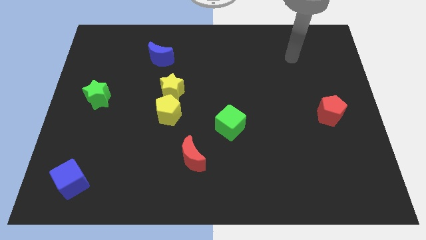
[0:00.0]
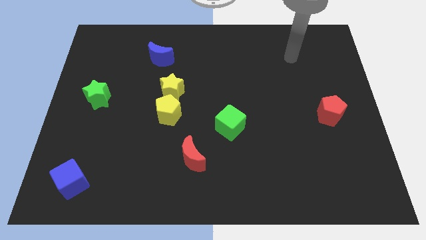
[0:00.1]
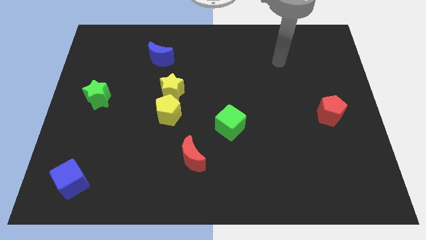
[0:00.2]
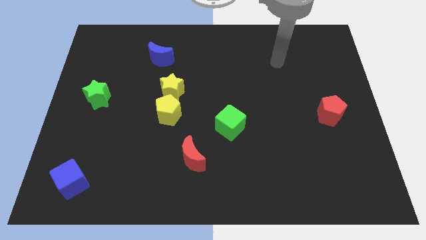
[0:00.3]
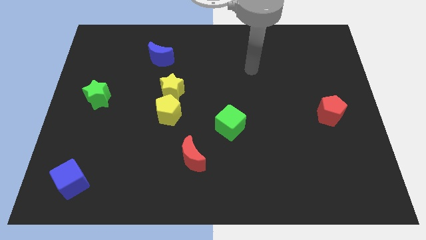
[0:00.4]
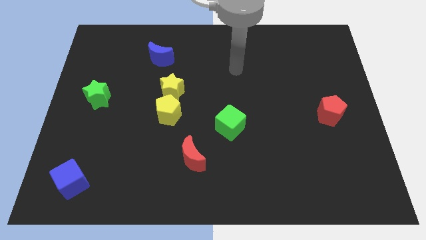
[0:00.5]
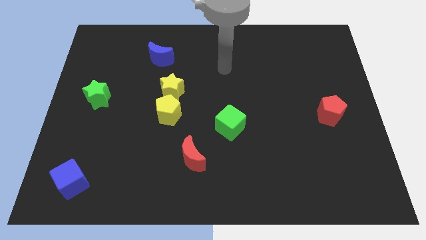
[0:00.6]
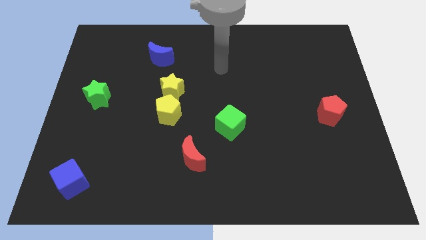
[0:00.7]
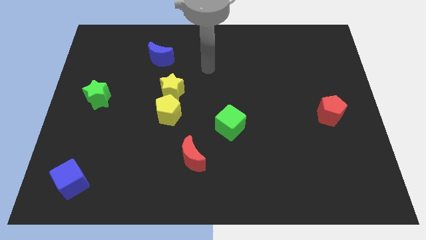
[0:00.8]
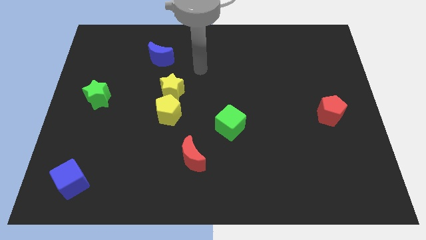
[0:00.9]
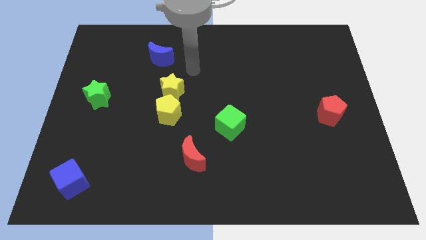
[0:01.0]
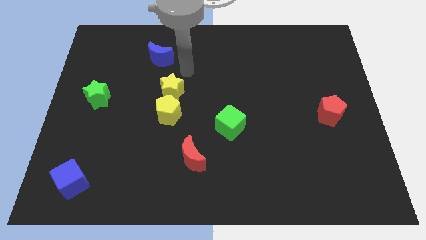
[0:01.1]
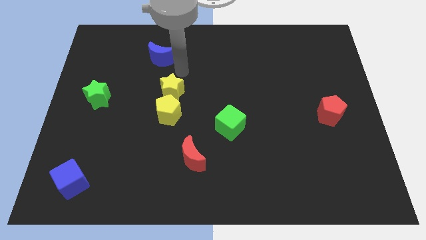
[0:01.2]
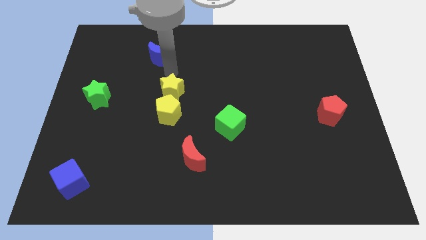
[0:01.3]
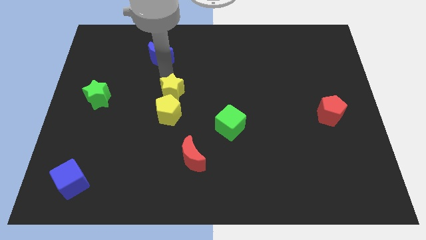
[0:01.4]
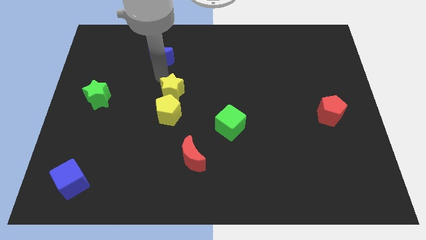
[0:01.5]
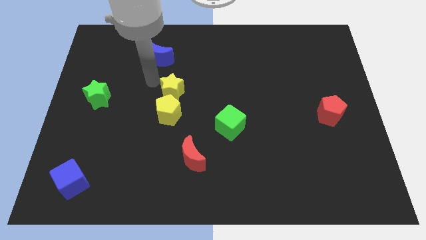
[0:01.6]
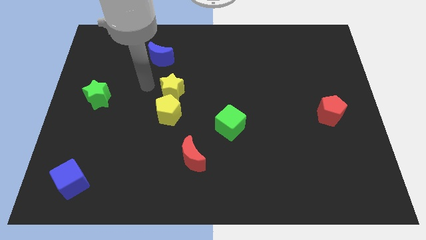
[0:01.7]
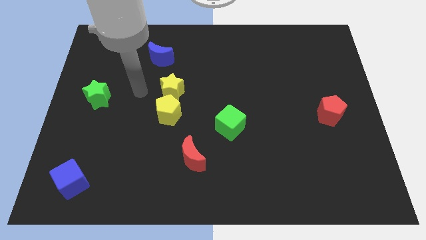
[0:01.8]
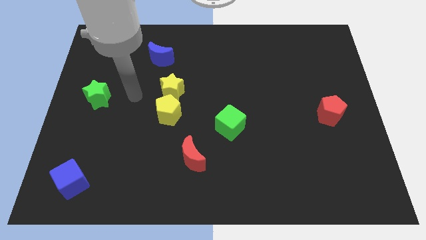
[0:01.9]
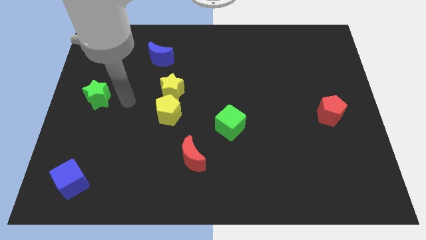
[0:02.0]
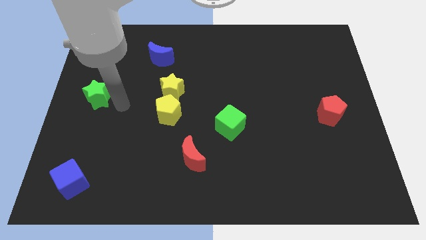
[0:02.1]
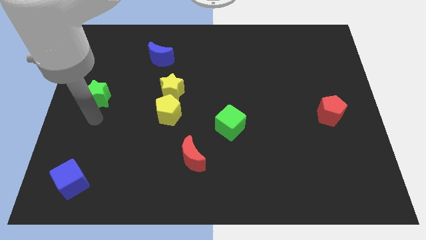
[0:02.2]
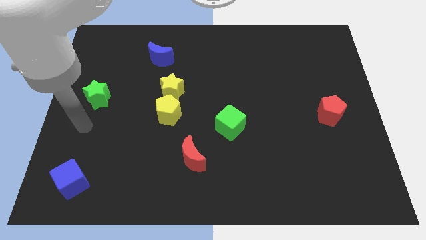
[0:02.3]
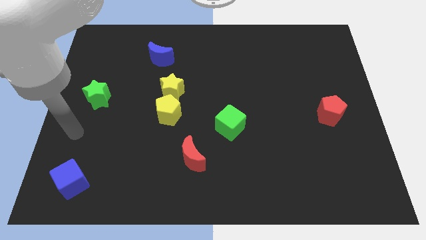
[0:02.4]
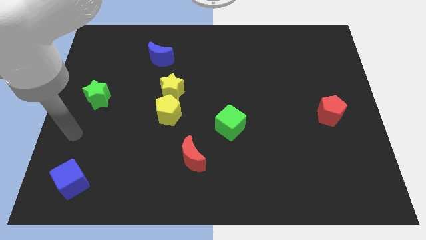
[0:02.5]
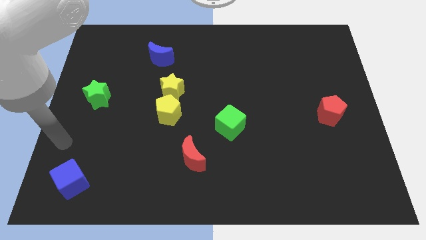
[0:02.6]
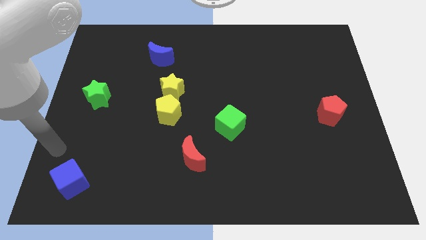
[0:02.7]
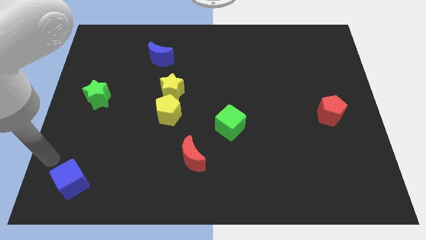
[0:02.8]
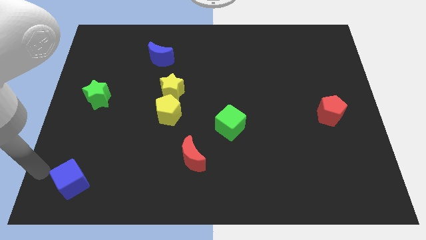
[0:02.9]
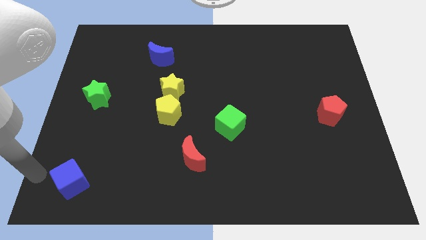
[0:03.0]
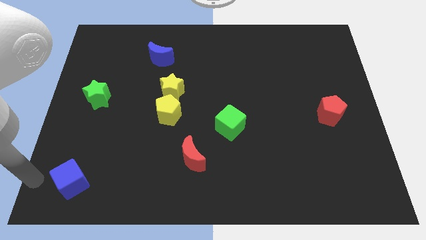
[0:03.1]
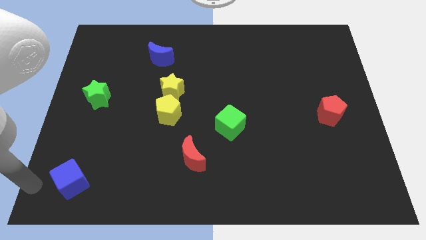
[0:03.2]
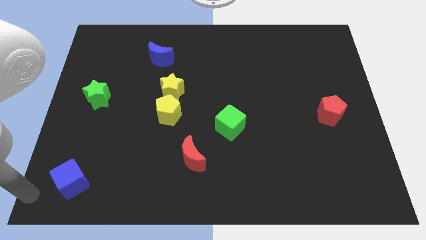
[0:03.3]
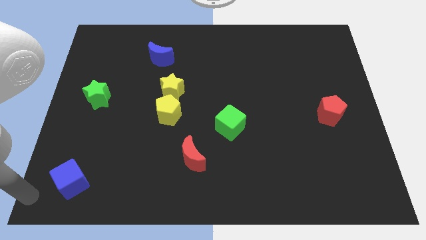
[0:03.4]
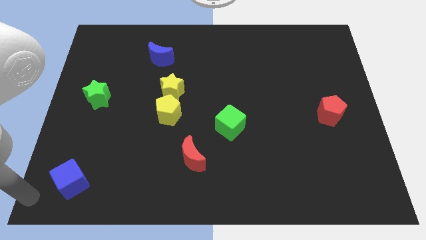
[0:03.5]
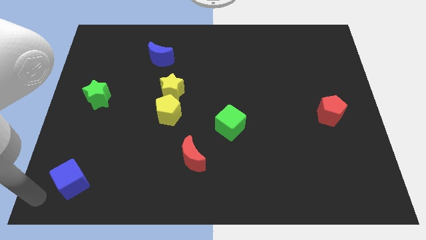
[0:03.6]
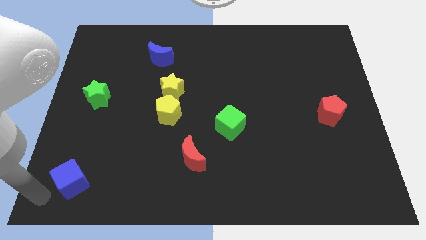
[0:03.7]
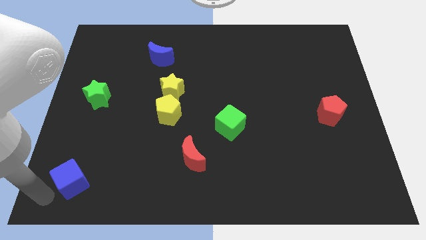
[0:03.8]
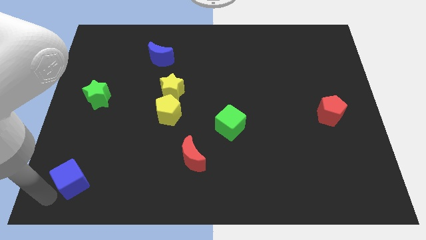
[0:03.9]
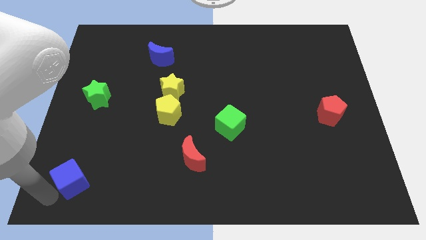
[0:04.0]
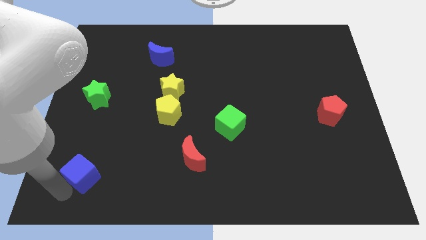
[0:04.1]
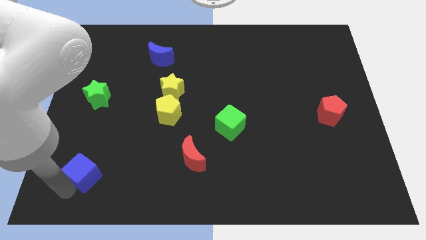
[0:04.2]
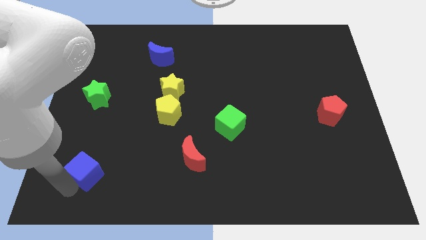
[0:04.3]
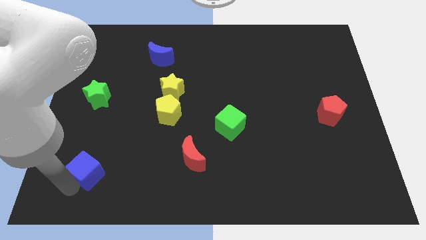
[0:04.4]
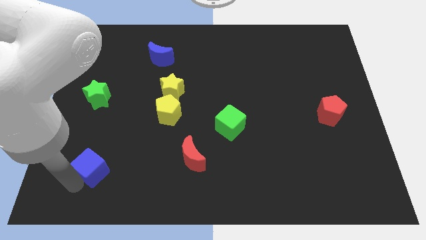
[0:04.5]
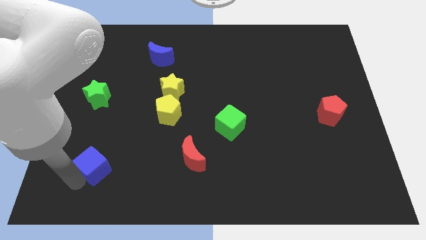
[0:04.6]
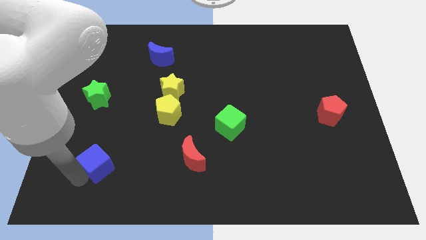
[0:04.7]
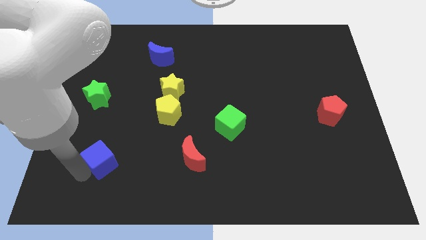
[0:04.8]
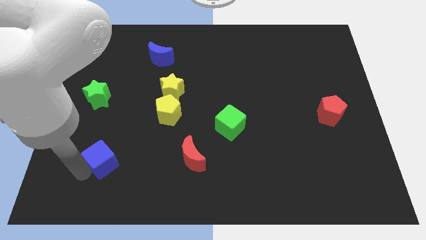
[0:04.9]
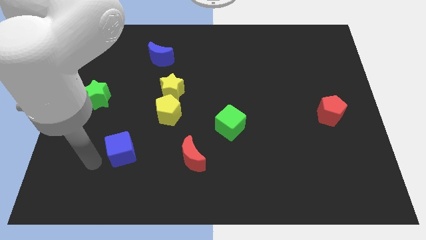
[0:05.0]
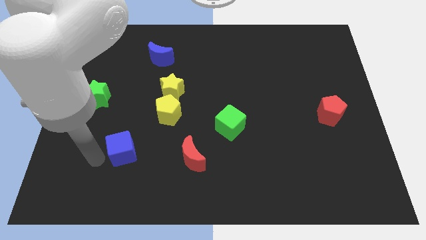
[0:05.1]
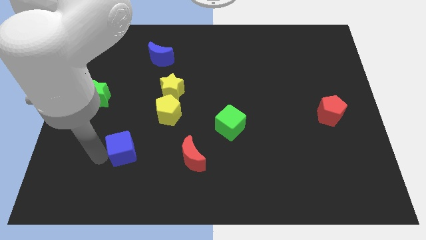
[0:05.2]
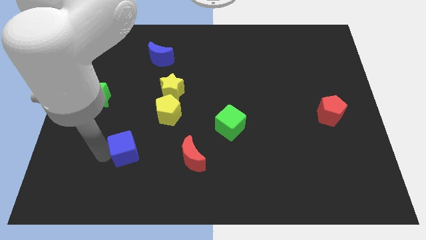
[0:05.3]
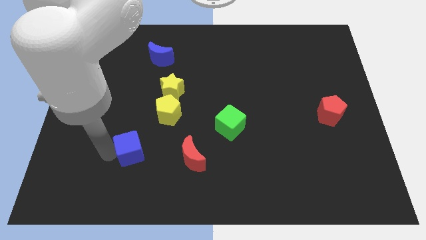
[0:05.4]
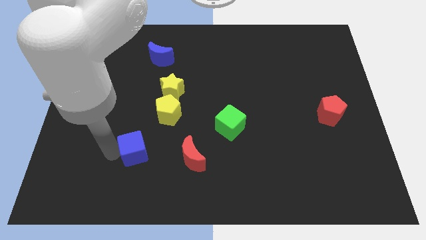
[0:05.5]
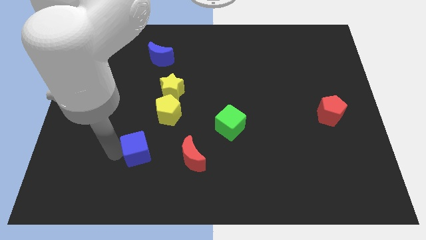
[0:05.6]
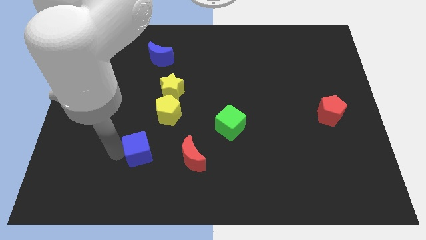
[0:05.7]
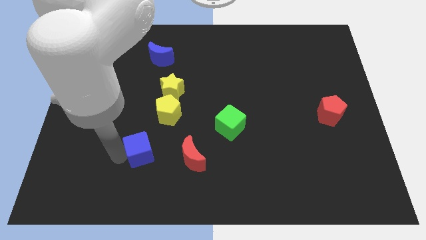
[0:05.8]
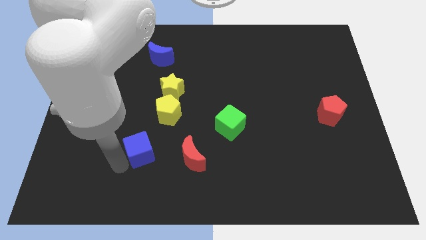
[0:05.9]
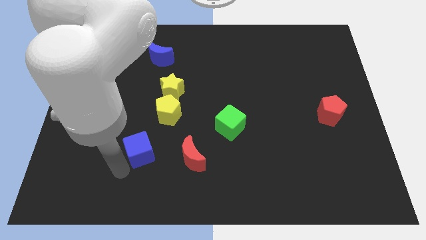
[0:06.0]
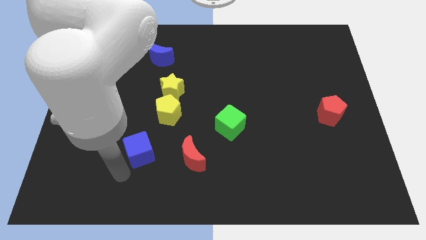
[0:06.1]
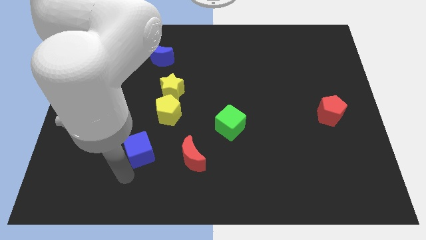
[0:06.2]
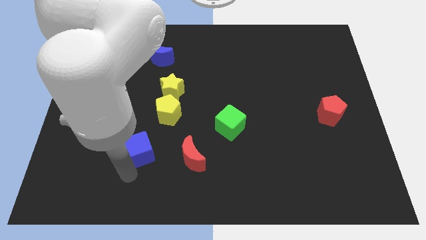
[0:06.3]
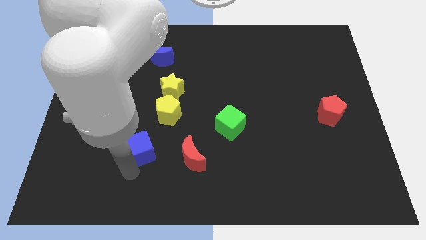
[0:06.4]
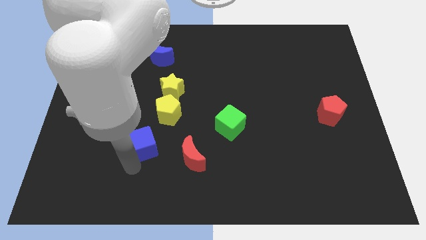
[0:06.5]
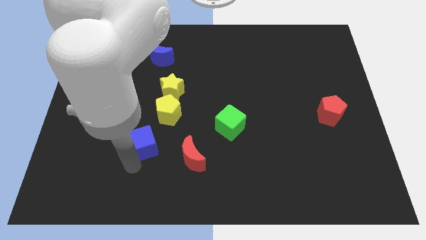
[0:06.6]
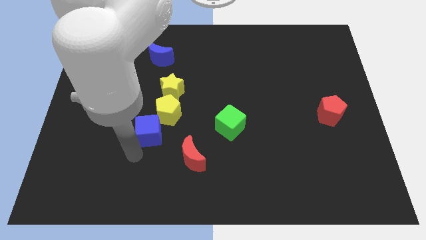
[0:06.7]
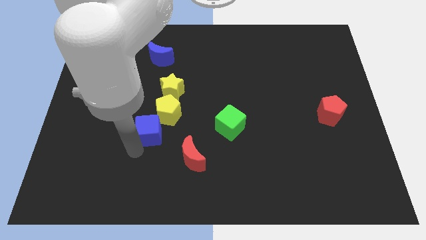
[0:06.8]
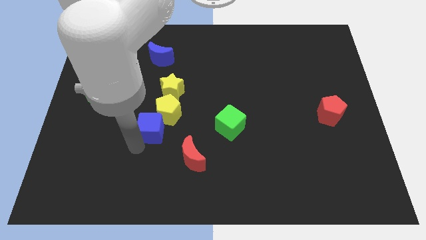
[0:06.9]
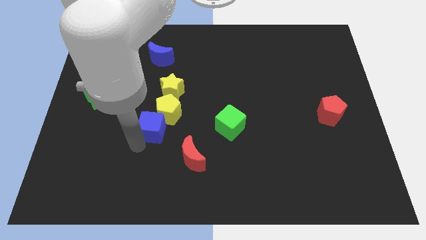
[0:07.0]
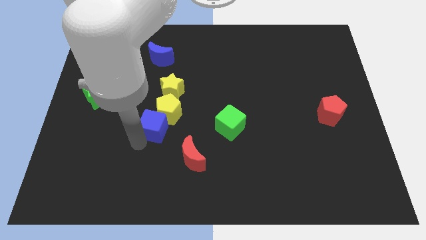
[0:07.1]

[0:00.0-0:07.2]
slide the blue cube next to the yellow pentagon

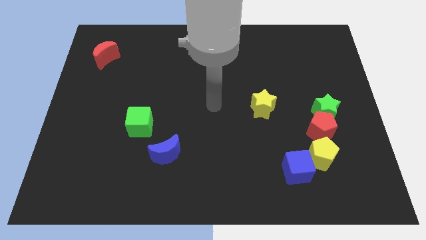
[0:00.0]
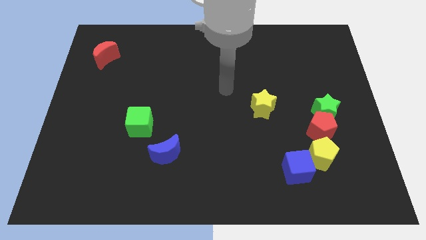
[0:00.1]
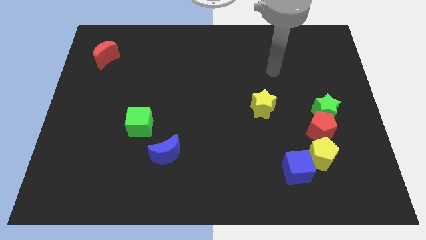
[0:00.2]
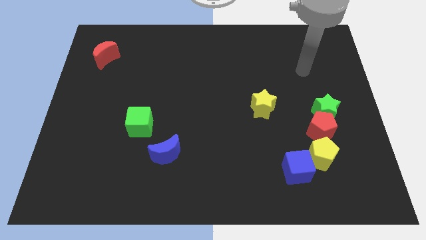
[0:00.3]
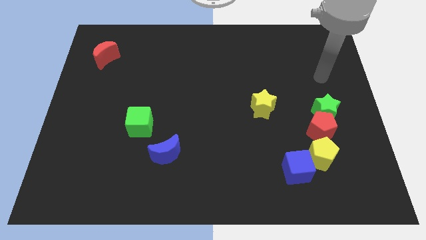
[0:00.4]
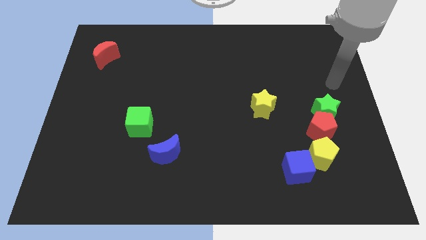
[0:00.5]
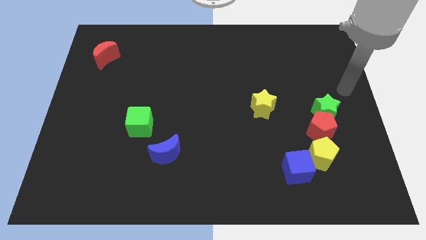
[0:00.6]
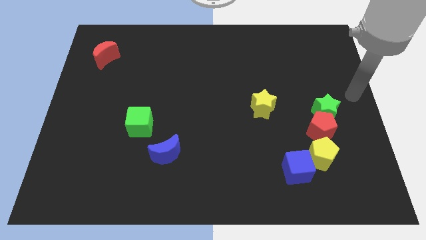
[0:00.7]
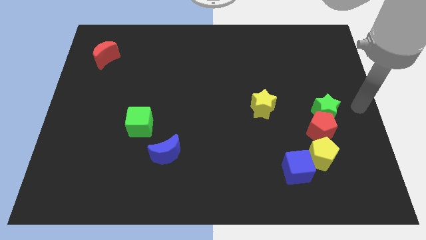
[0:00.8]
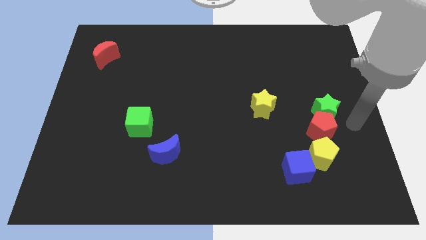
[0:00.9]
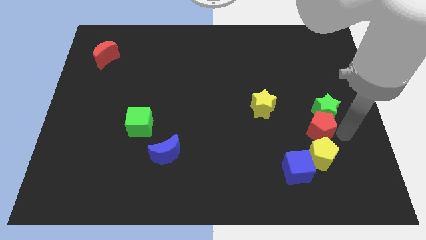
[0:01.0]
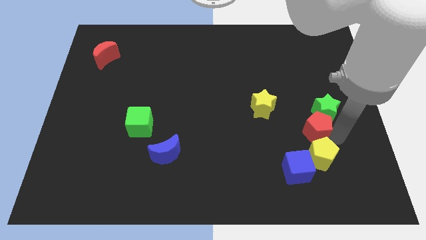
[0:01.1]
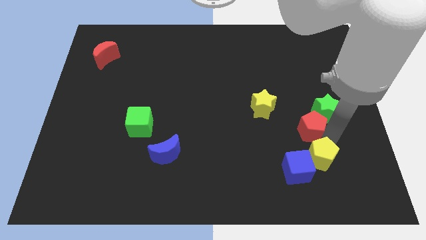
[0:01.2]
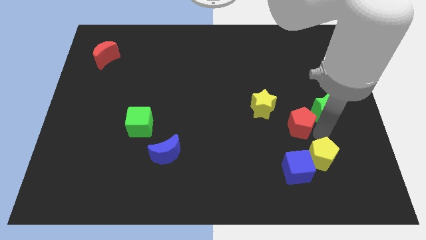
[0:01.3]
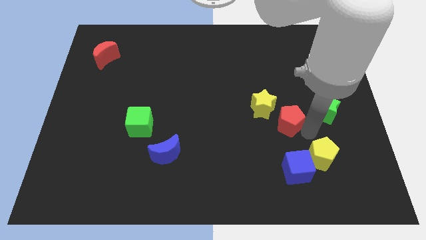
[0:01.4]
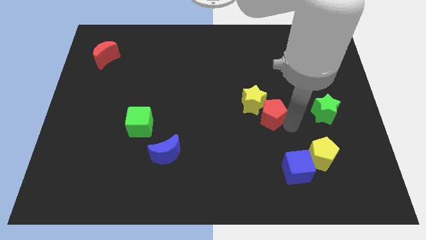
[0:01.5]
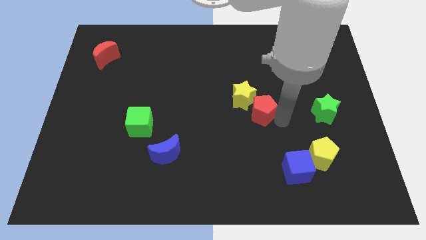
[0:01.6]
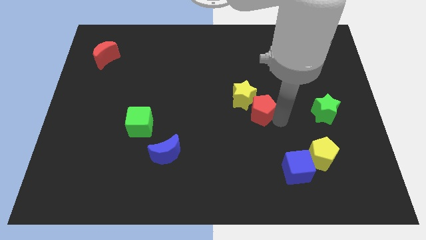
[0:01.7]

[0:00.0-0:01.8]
put the red pentagon to the yellow star
